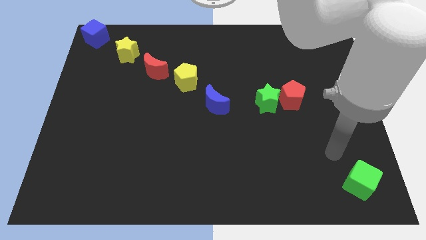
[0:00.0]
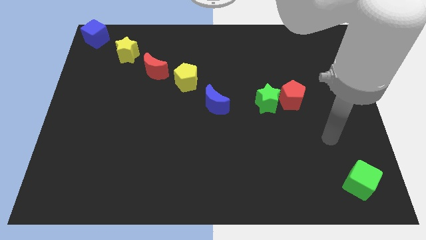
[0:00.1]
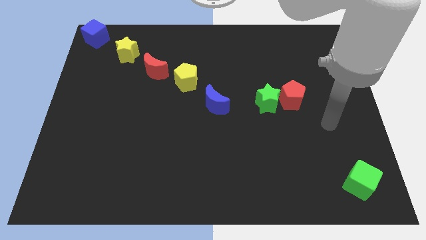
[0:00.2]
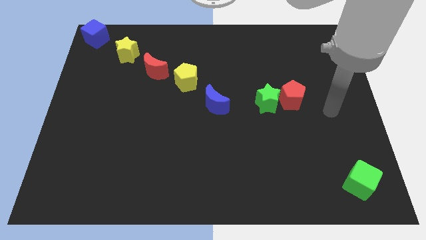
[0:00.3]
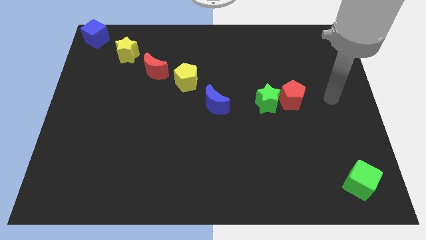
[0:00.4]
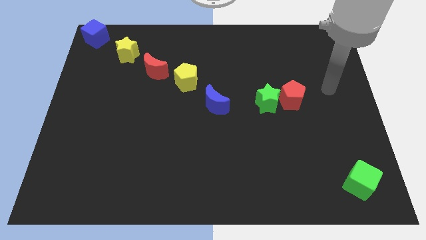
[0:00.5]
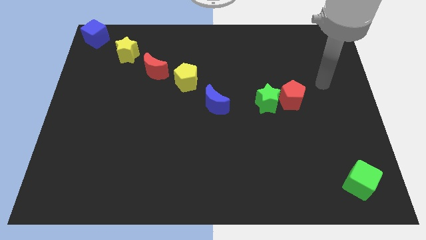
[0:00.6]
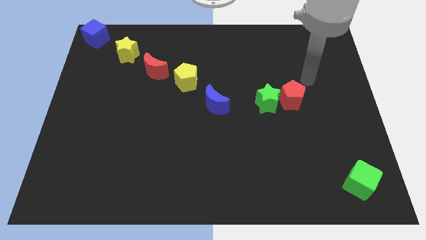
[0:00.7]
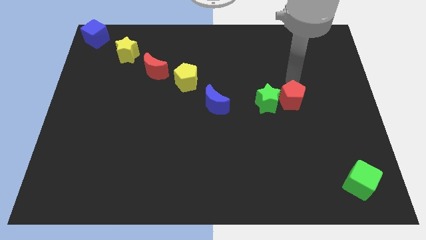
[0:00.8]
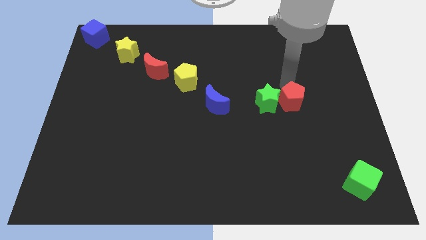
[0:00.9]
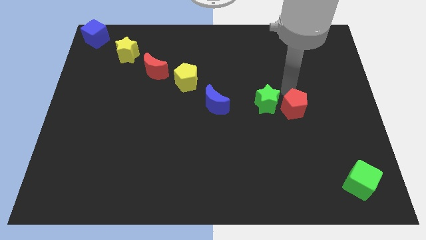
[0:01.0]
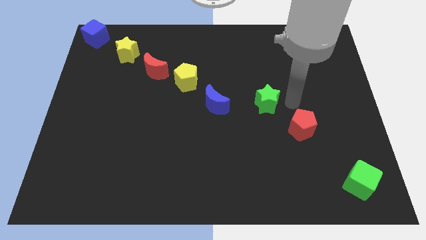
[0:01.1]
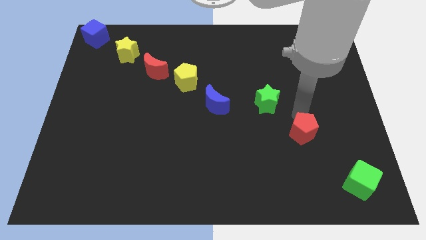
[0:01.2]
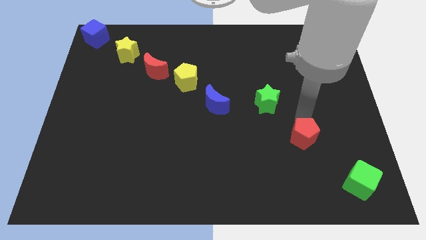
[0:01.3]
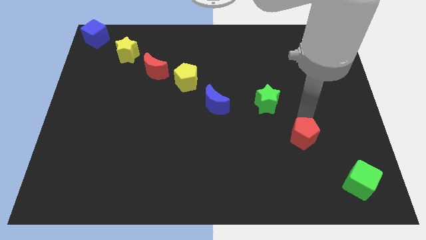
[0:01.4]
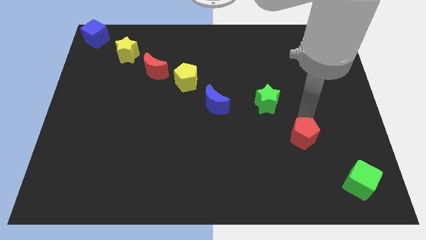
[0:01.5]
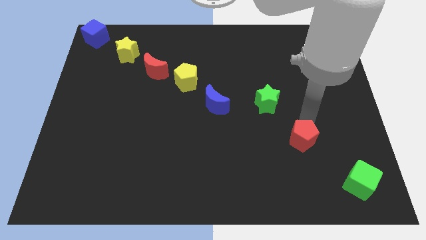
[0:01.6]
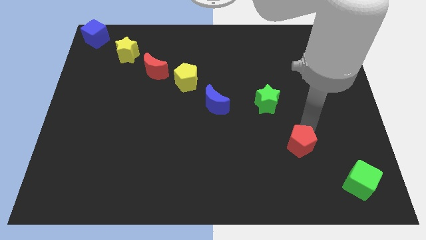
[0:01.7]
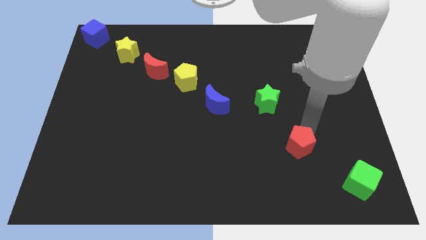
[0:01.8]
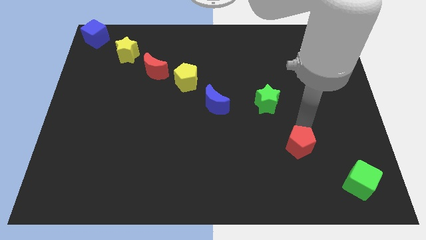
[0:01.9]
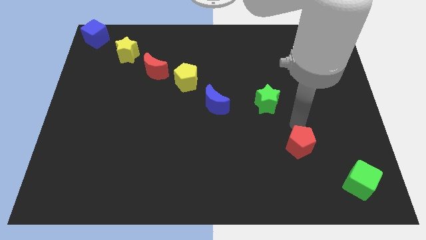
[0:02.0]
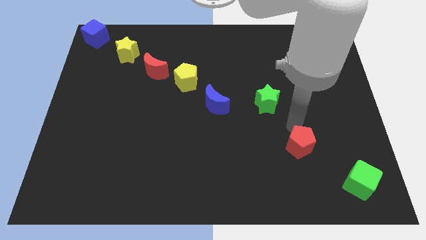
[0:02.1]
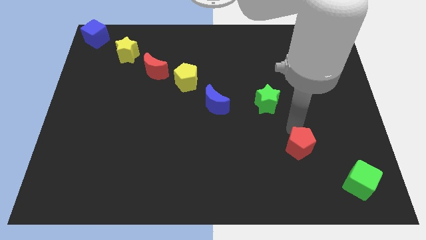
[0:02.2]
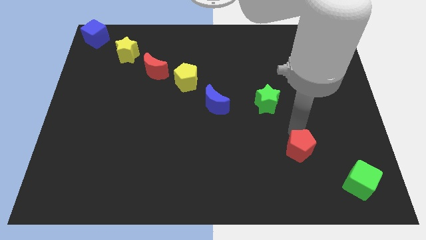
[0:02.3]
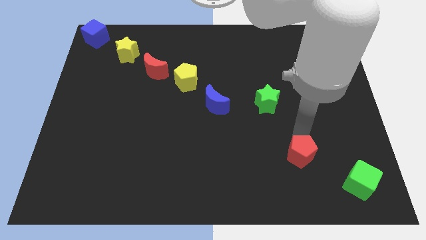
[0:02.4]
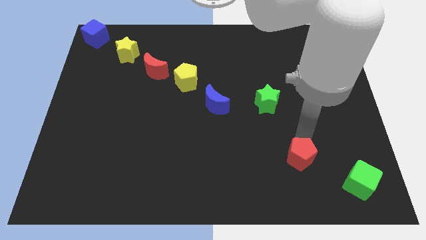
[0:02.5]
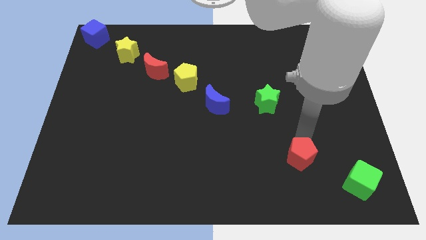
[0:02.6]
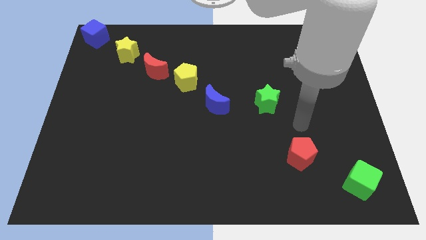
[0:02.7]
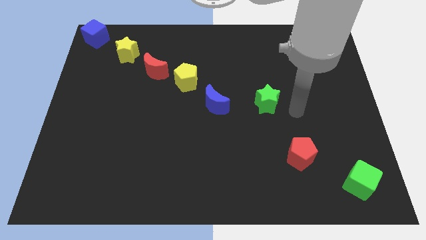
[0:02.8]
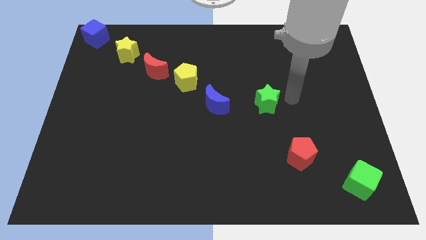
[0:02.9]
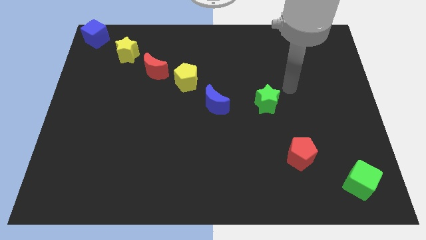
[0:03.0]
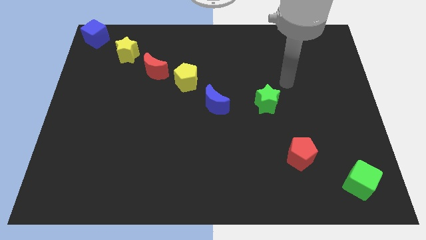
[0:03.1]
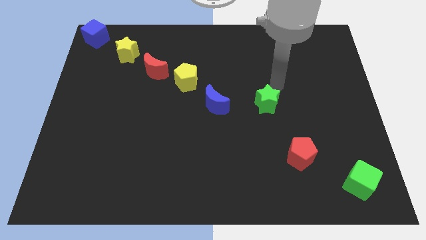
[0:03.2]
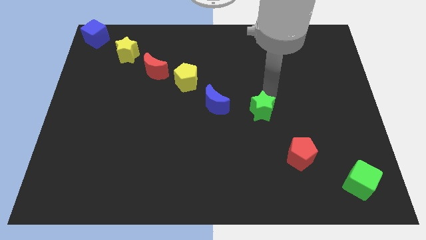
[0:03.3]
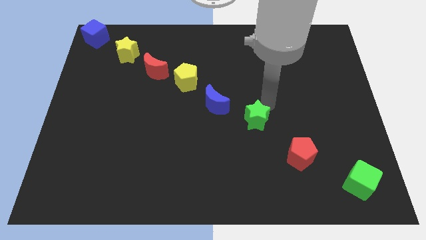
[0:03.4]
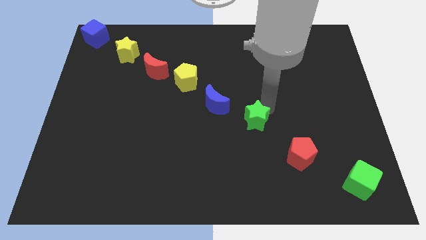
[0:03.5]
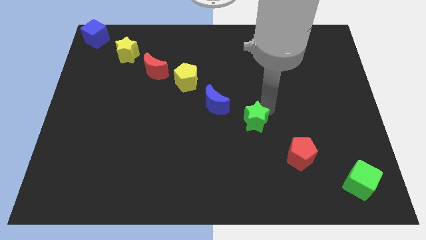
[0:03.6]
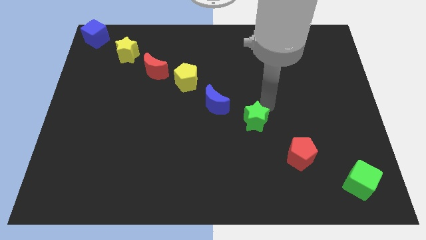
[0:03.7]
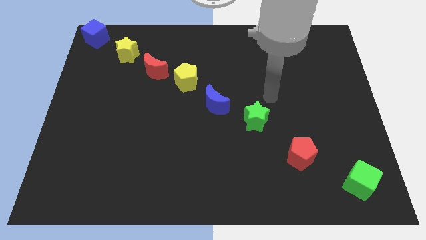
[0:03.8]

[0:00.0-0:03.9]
move green star between blue crescent and red pentagon

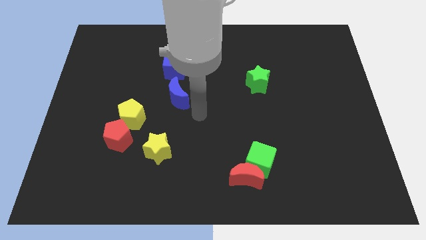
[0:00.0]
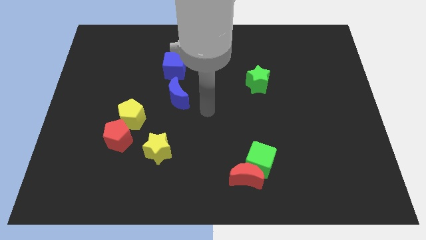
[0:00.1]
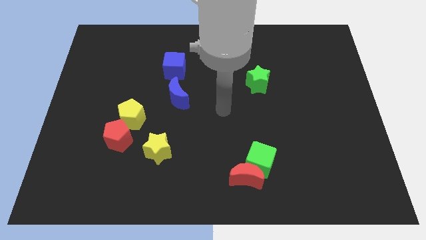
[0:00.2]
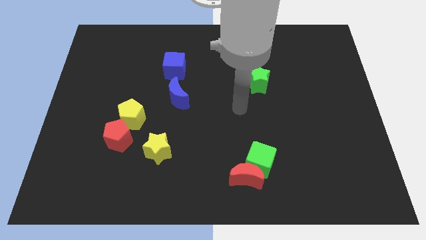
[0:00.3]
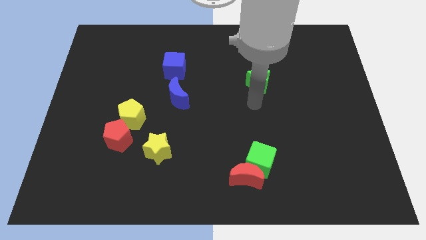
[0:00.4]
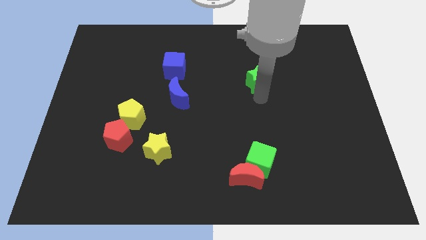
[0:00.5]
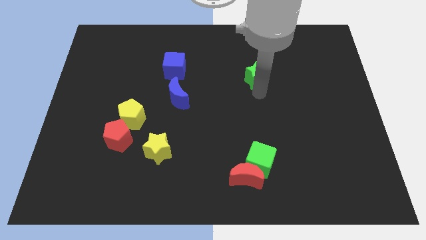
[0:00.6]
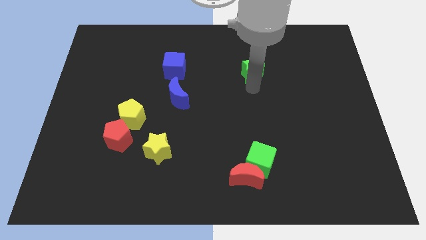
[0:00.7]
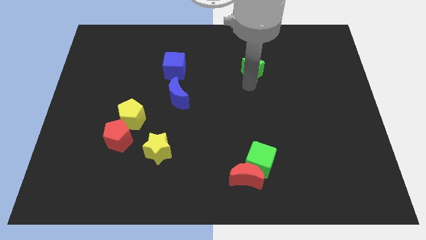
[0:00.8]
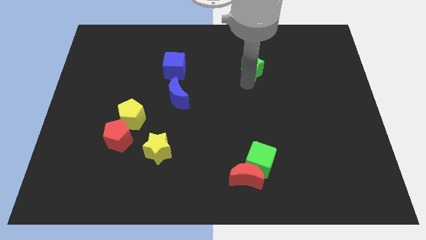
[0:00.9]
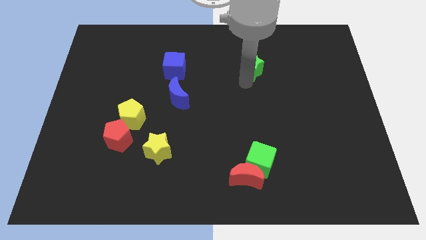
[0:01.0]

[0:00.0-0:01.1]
push the green star to the top of the board

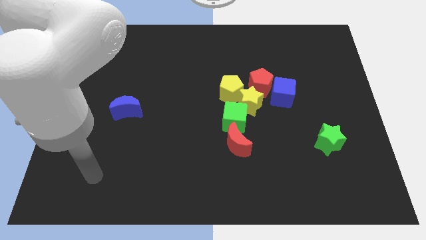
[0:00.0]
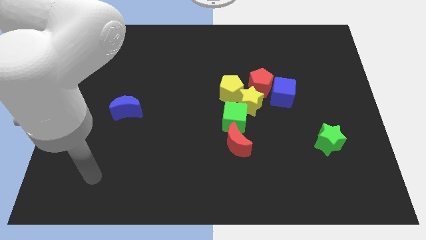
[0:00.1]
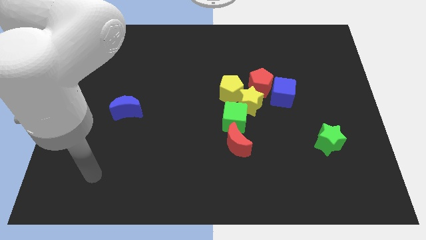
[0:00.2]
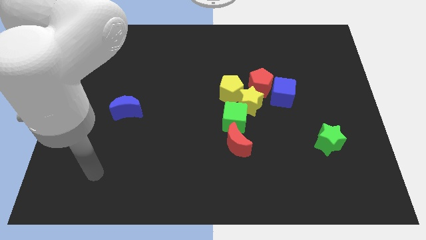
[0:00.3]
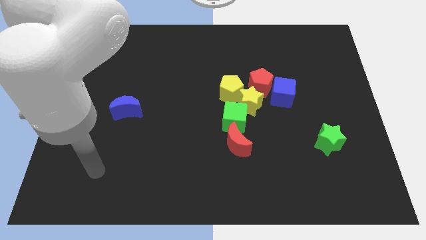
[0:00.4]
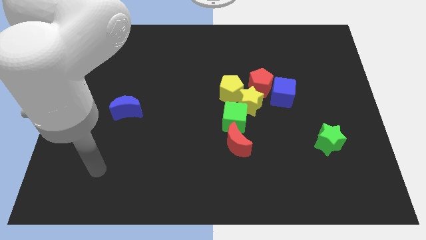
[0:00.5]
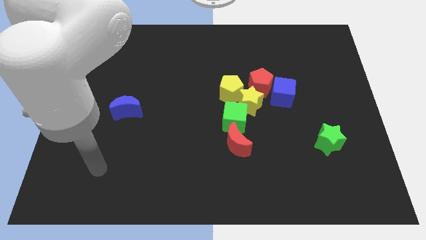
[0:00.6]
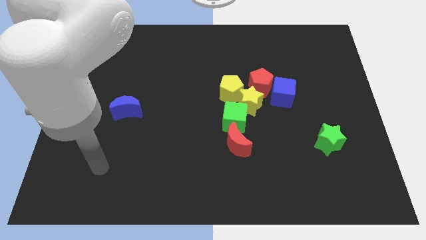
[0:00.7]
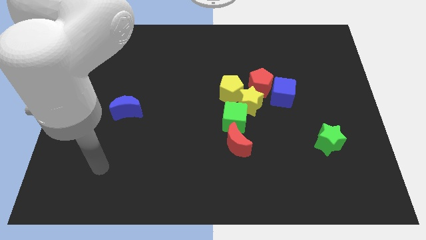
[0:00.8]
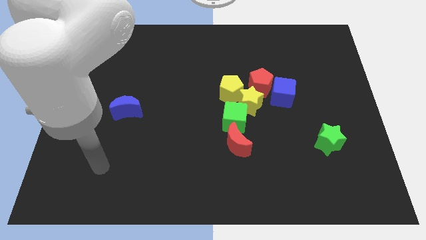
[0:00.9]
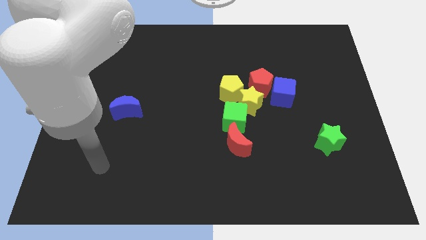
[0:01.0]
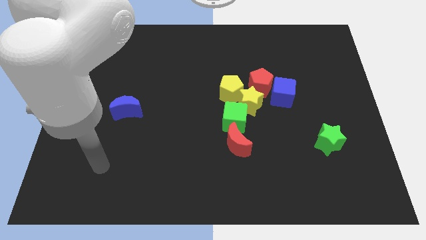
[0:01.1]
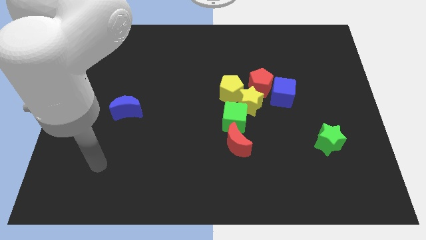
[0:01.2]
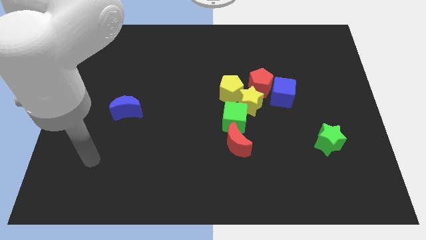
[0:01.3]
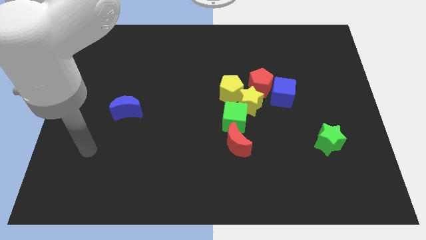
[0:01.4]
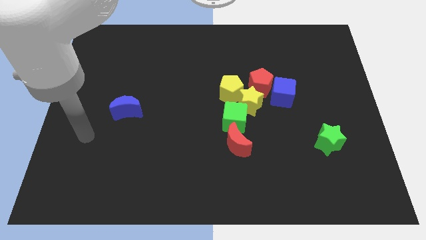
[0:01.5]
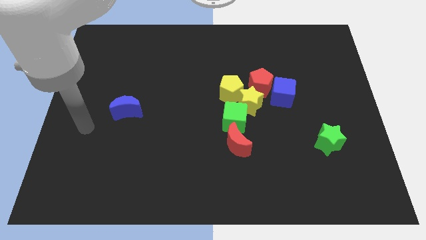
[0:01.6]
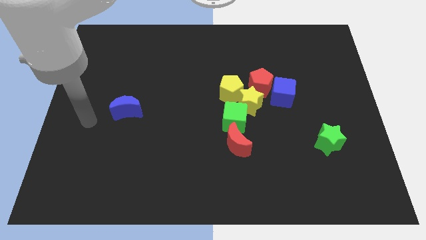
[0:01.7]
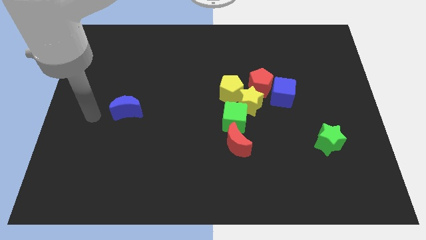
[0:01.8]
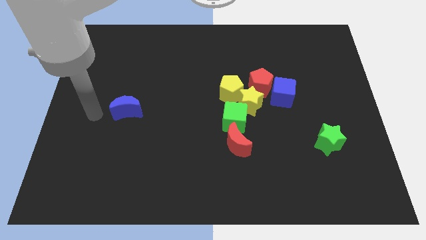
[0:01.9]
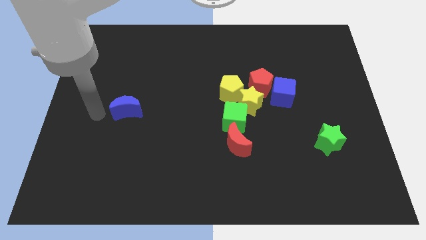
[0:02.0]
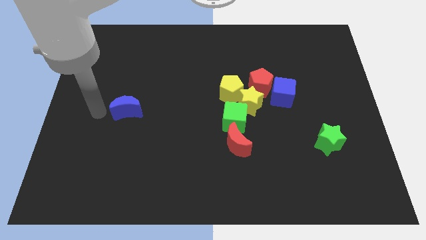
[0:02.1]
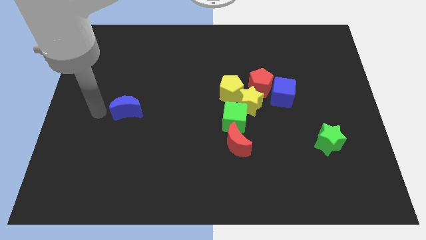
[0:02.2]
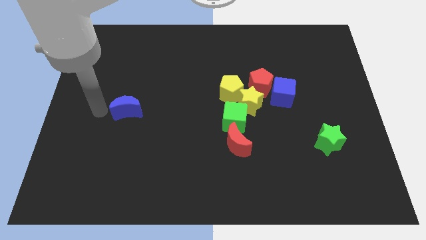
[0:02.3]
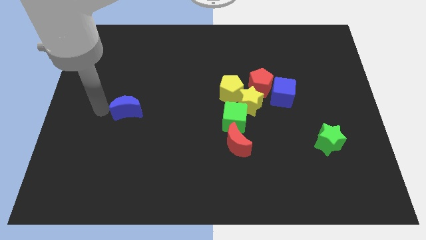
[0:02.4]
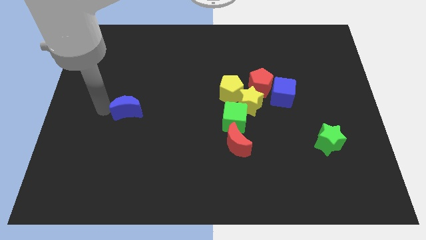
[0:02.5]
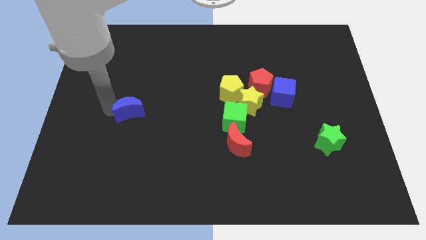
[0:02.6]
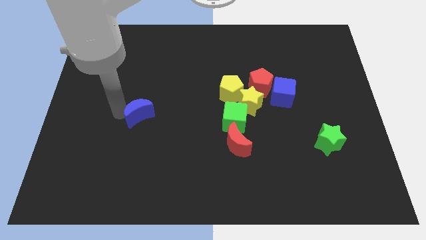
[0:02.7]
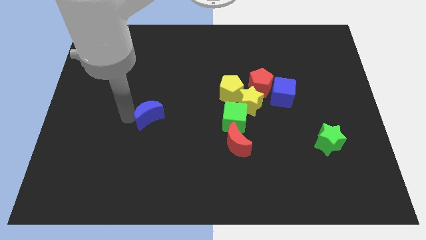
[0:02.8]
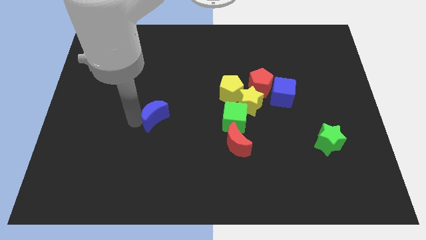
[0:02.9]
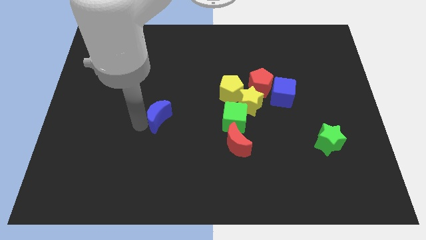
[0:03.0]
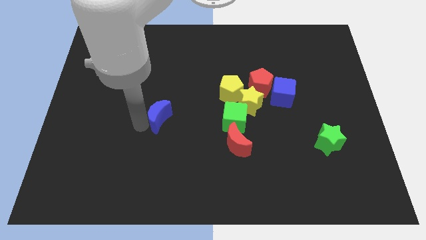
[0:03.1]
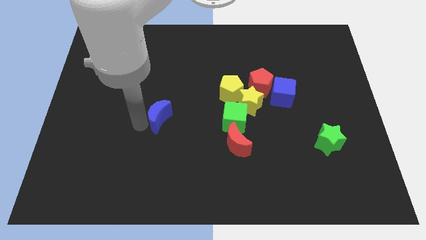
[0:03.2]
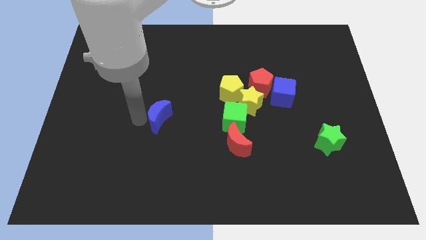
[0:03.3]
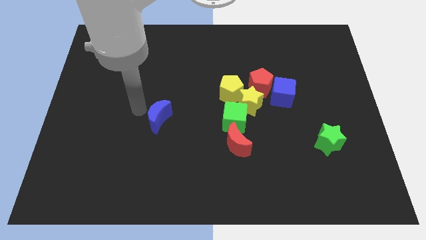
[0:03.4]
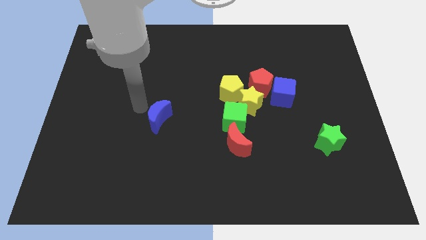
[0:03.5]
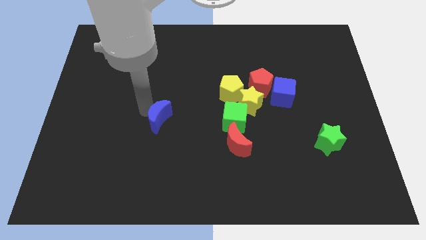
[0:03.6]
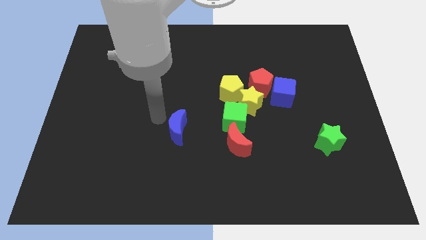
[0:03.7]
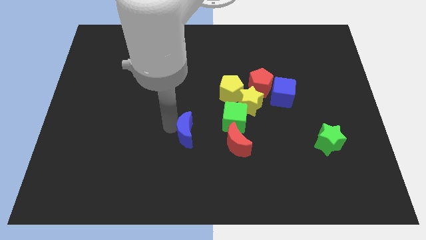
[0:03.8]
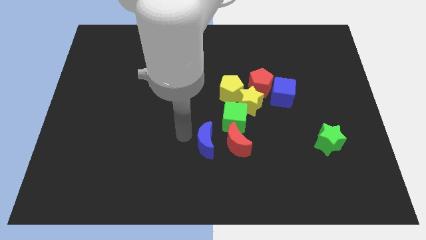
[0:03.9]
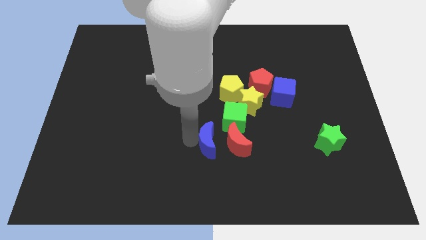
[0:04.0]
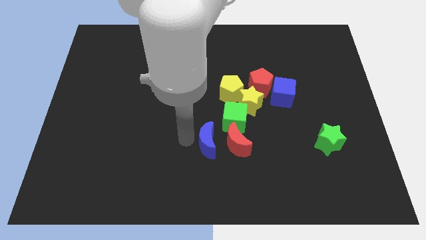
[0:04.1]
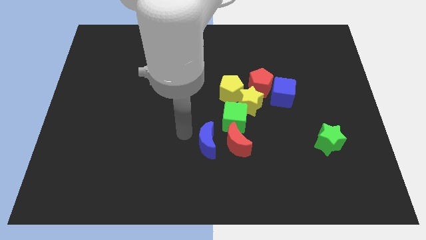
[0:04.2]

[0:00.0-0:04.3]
move the blue crescent towards the red crescent
